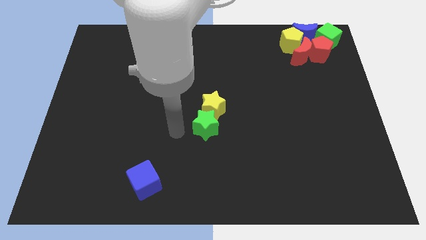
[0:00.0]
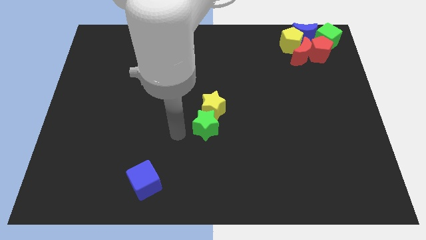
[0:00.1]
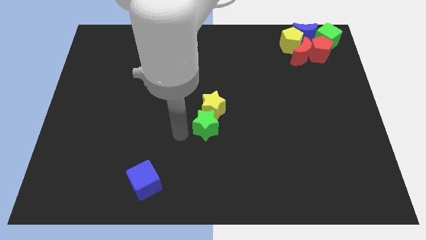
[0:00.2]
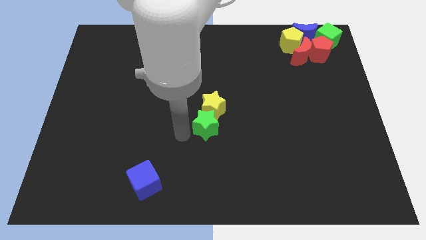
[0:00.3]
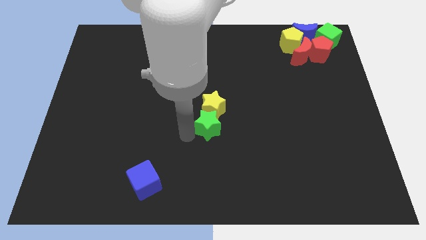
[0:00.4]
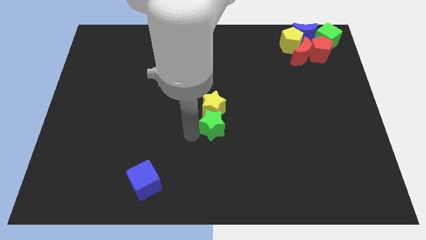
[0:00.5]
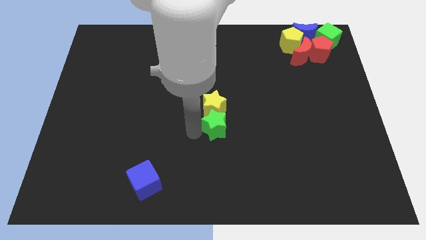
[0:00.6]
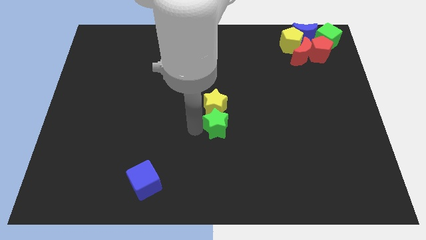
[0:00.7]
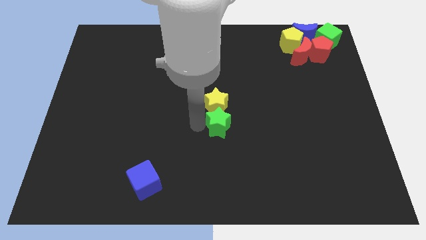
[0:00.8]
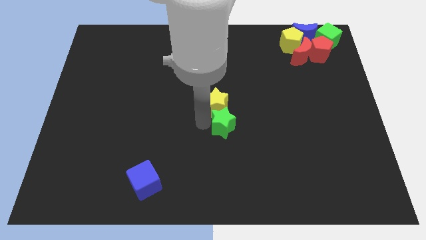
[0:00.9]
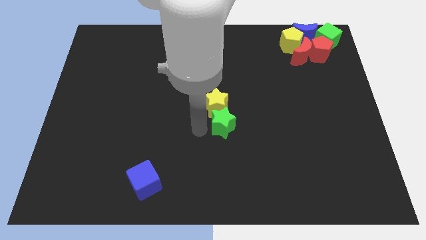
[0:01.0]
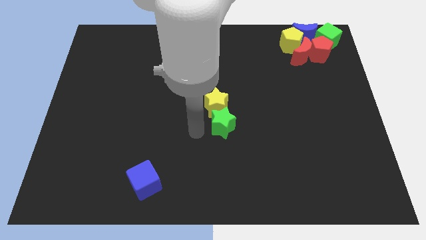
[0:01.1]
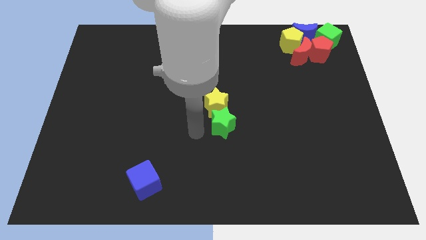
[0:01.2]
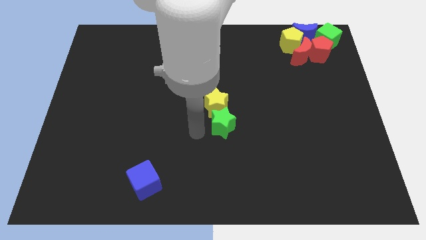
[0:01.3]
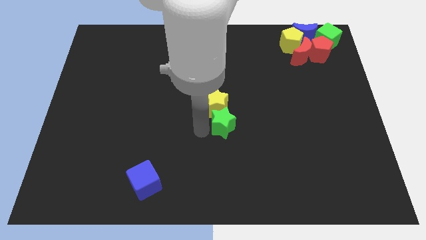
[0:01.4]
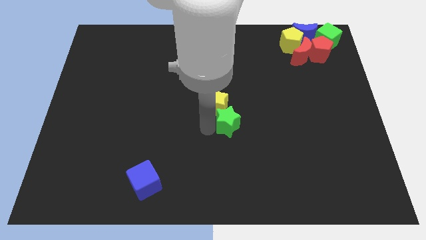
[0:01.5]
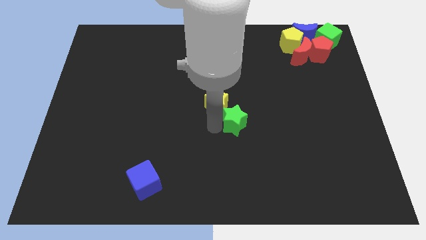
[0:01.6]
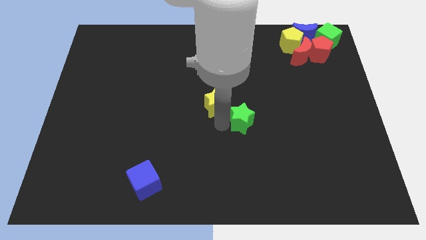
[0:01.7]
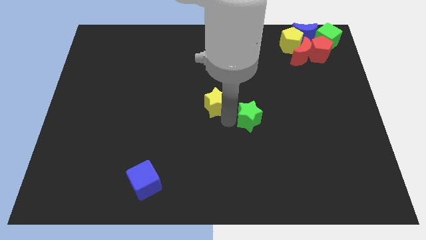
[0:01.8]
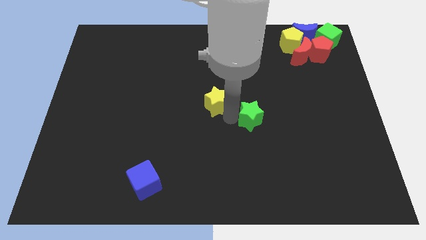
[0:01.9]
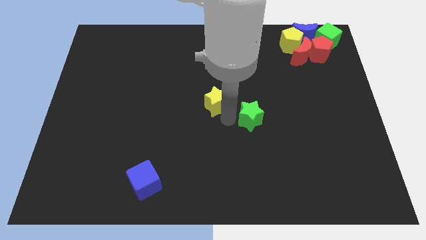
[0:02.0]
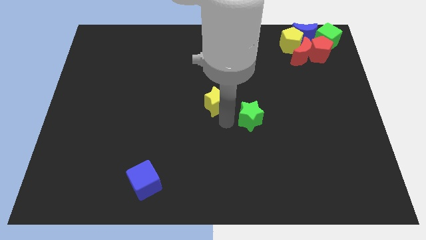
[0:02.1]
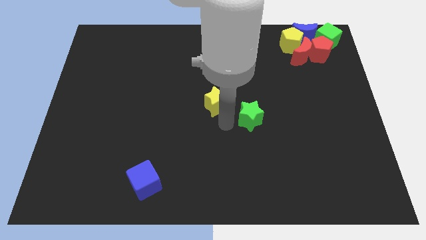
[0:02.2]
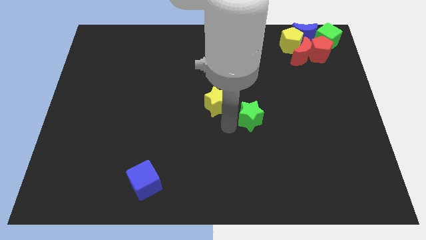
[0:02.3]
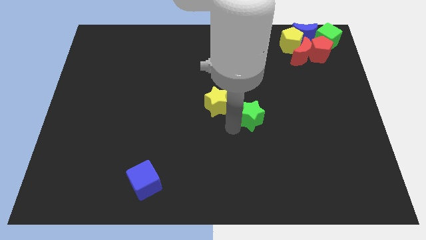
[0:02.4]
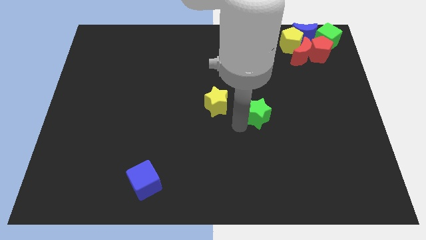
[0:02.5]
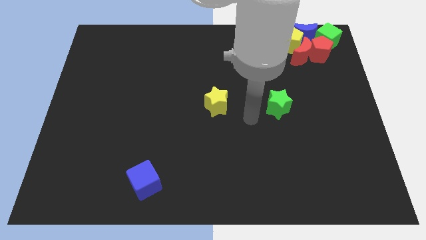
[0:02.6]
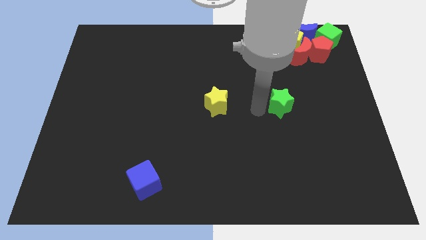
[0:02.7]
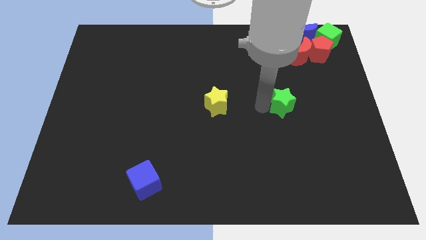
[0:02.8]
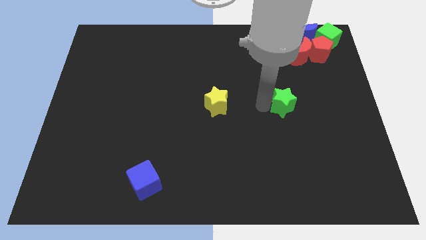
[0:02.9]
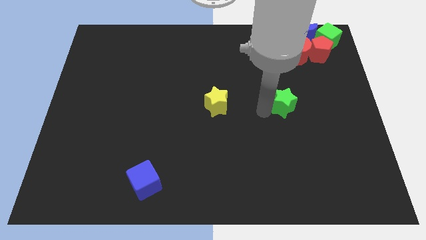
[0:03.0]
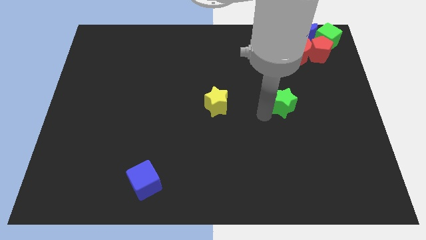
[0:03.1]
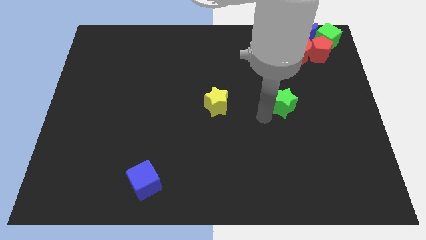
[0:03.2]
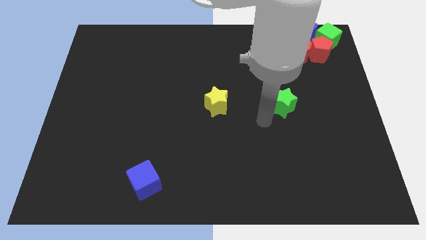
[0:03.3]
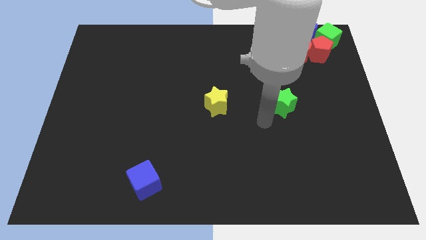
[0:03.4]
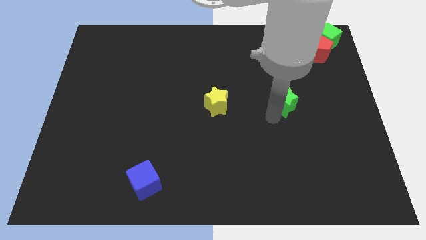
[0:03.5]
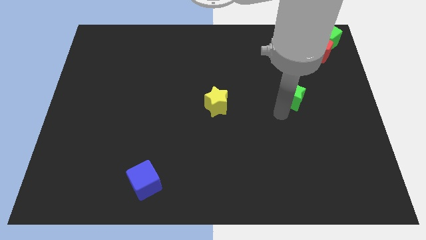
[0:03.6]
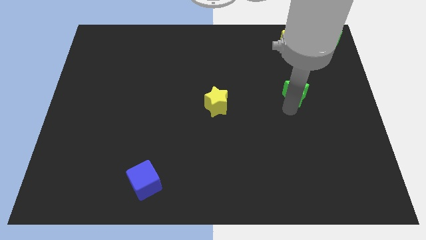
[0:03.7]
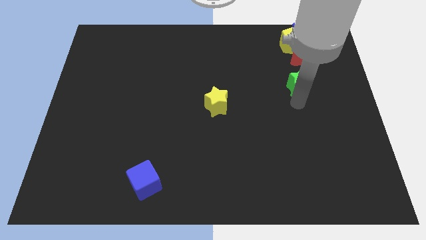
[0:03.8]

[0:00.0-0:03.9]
separate the green star from the yellow star

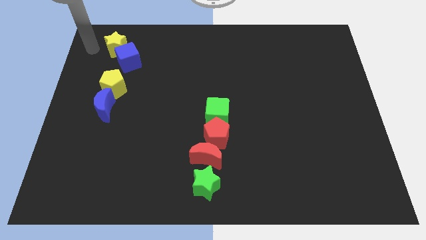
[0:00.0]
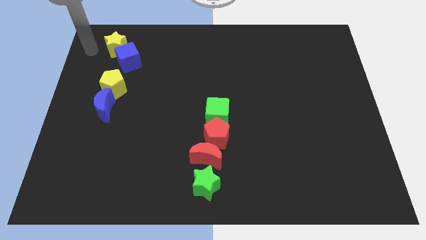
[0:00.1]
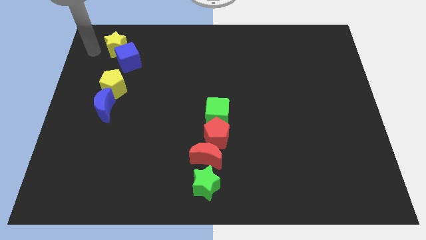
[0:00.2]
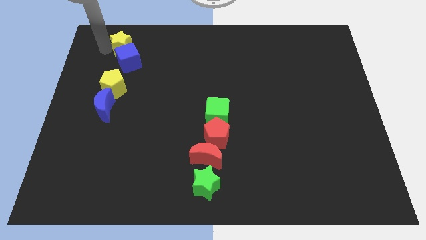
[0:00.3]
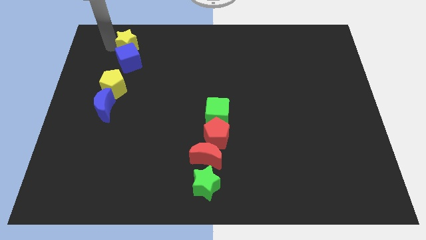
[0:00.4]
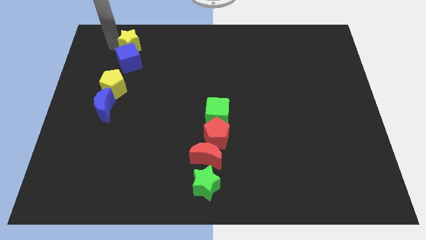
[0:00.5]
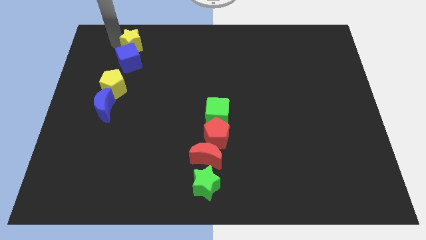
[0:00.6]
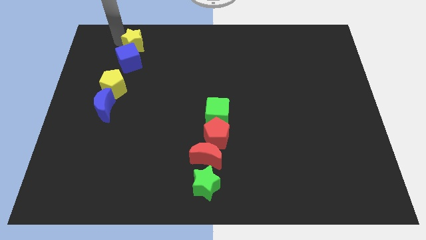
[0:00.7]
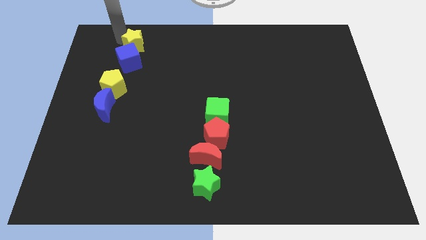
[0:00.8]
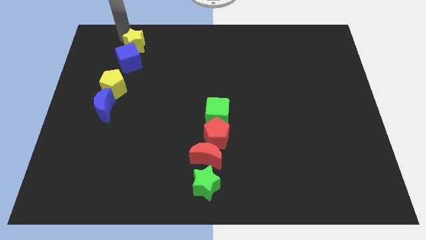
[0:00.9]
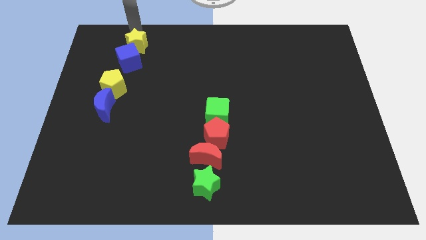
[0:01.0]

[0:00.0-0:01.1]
move yellow star to the top of blue cube

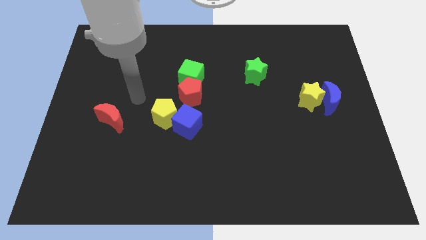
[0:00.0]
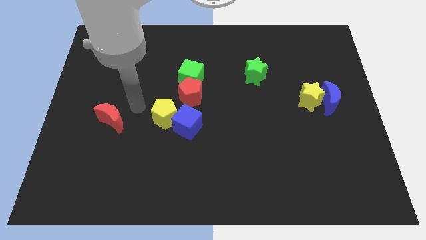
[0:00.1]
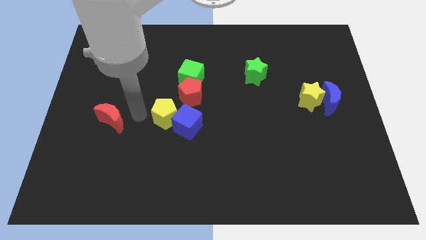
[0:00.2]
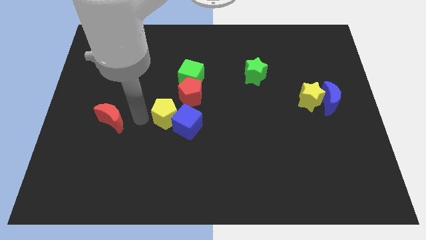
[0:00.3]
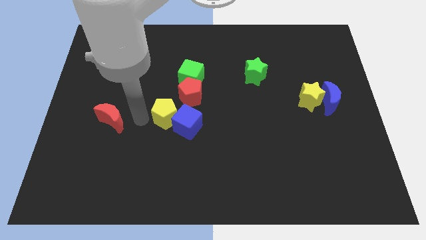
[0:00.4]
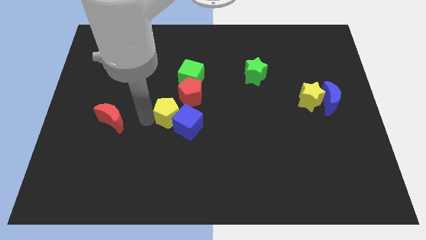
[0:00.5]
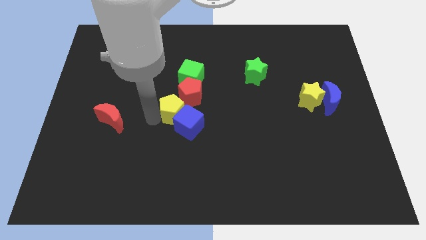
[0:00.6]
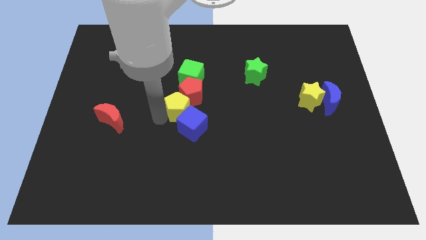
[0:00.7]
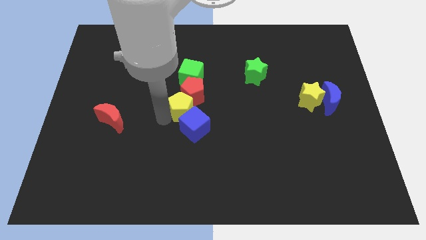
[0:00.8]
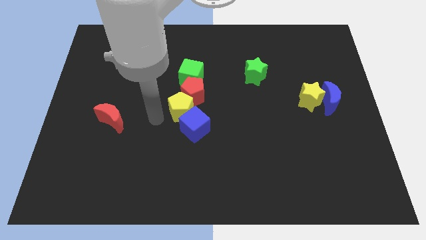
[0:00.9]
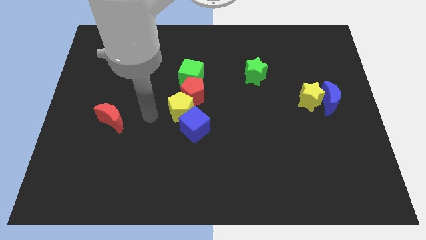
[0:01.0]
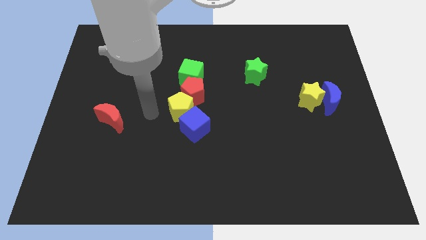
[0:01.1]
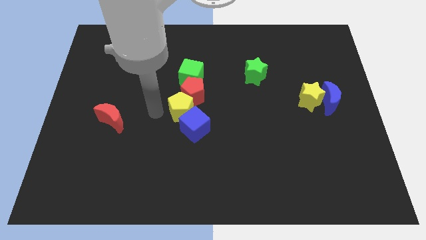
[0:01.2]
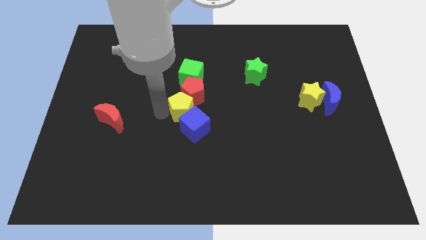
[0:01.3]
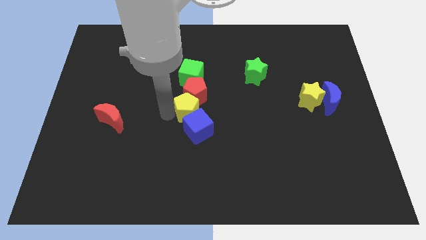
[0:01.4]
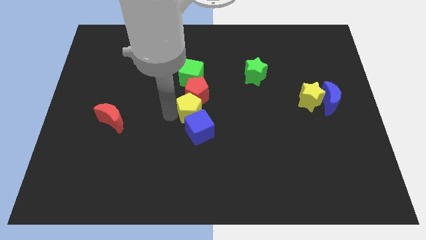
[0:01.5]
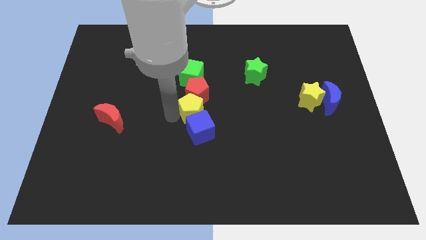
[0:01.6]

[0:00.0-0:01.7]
move the yellow pentagon in between the red pentagon and blue cube

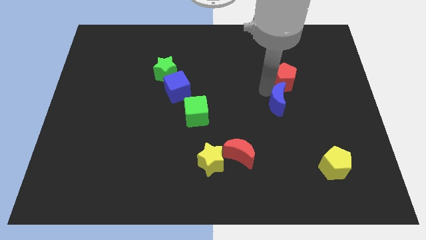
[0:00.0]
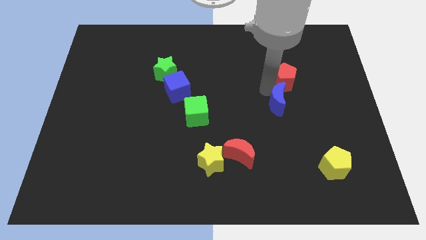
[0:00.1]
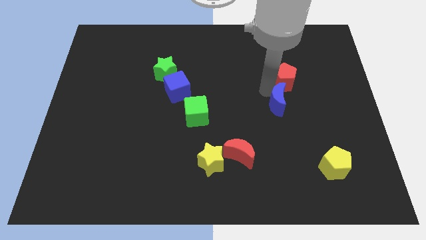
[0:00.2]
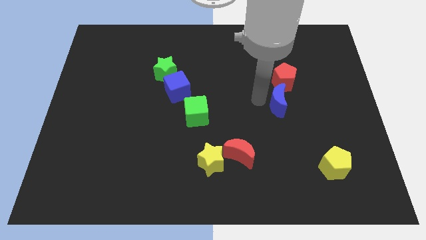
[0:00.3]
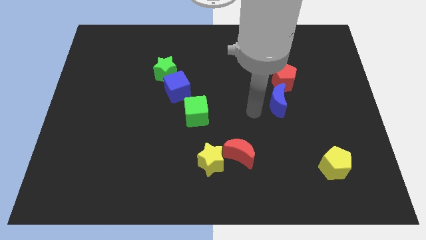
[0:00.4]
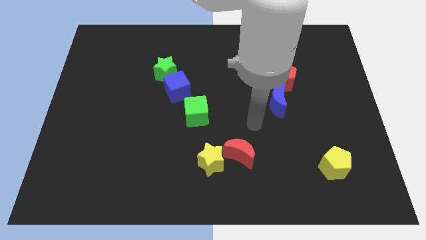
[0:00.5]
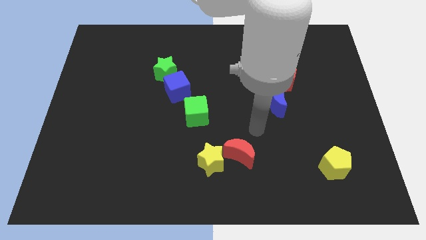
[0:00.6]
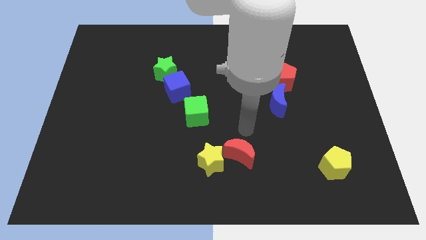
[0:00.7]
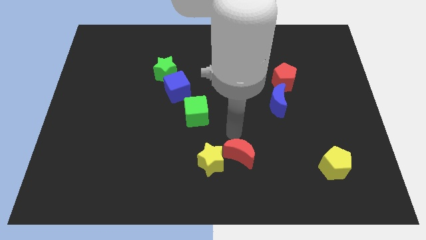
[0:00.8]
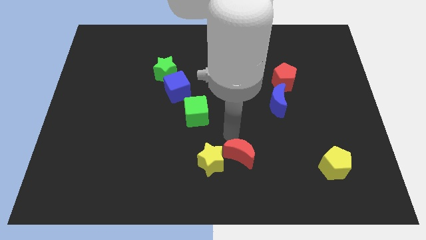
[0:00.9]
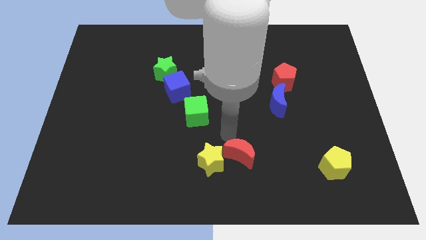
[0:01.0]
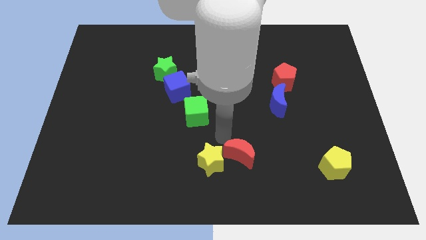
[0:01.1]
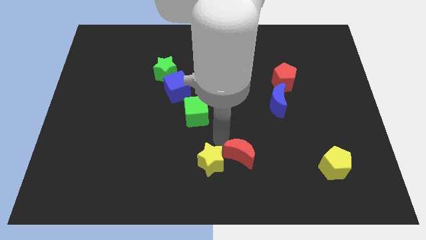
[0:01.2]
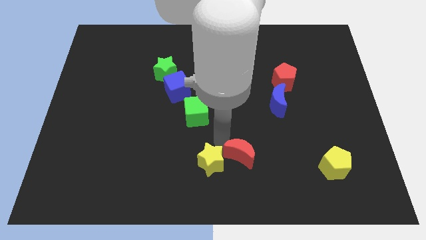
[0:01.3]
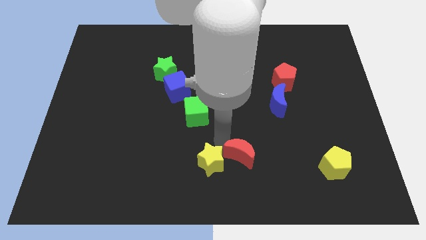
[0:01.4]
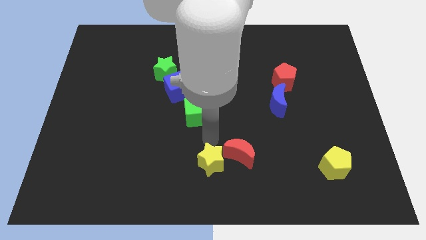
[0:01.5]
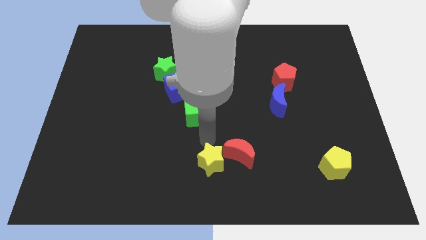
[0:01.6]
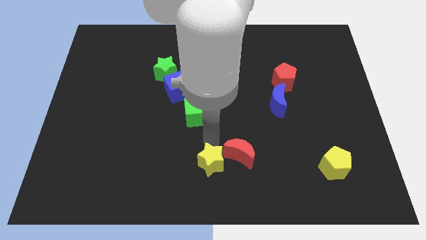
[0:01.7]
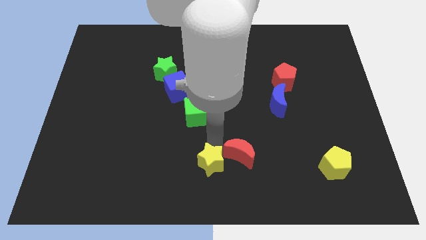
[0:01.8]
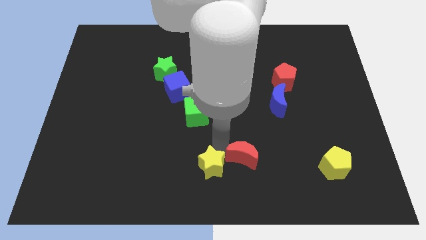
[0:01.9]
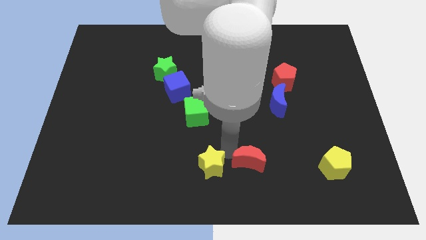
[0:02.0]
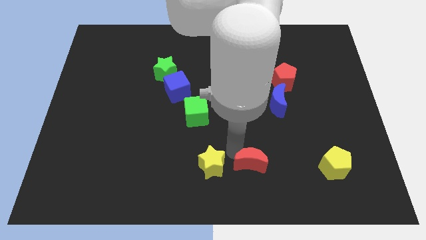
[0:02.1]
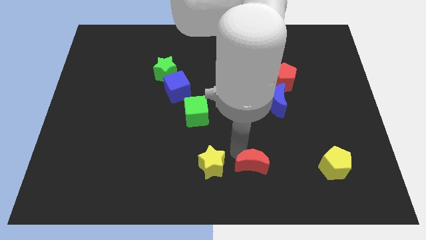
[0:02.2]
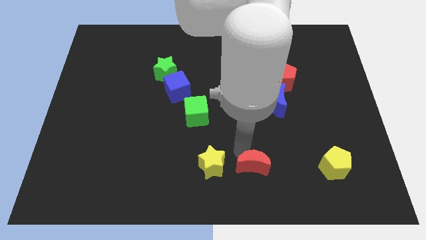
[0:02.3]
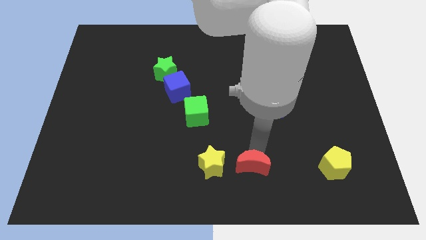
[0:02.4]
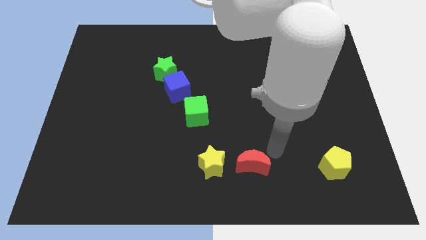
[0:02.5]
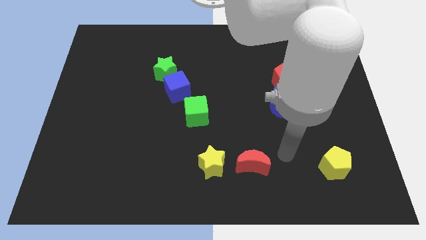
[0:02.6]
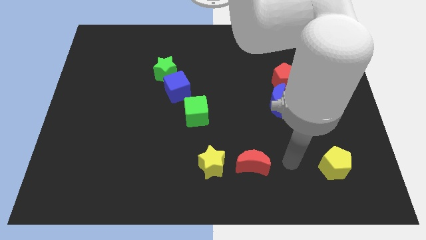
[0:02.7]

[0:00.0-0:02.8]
separate yellow star and red moon
